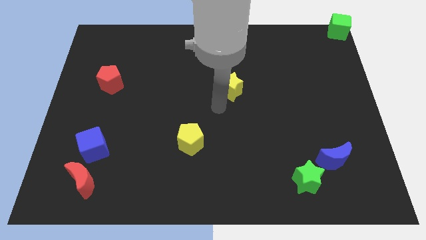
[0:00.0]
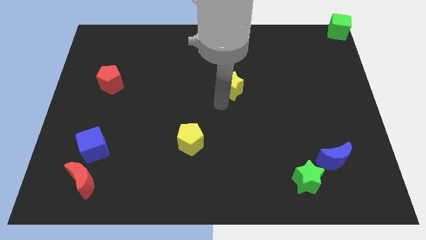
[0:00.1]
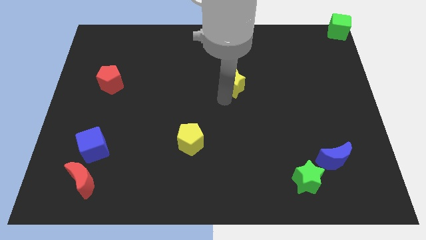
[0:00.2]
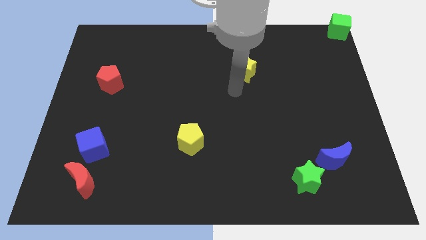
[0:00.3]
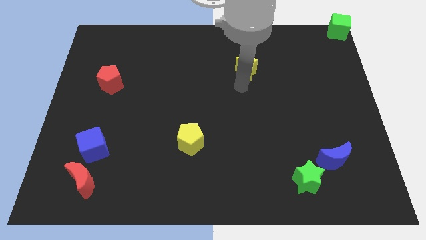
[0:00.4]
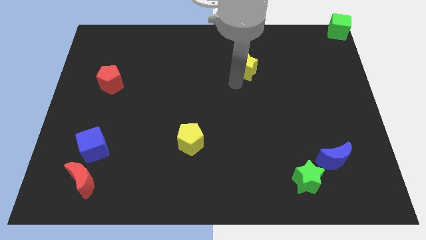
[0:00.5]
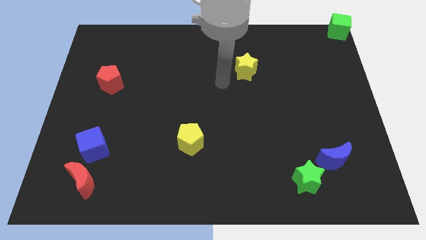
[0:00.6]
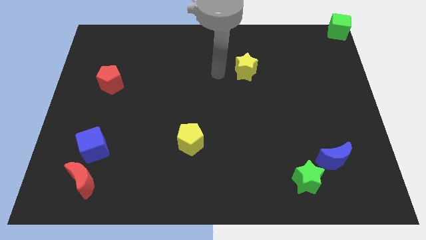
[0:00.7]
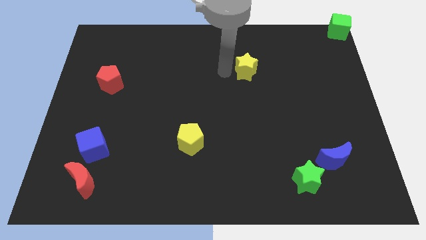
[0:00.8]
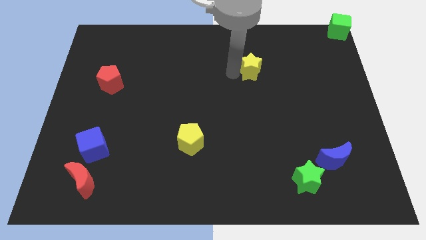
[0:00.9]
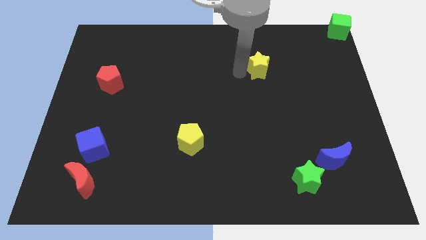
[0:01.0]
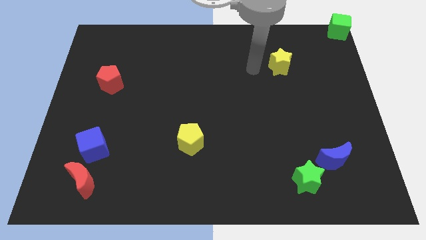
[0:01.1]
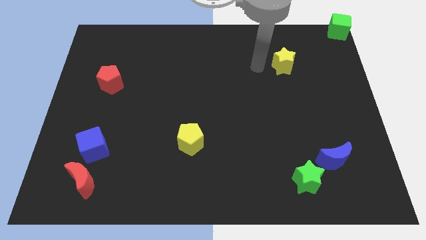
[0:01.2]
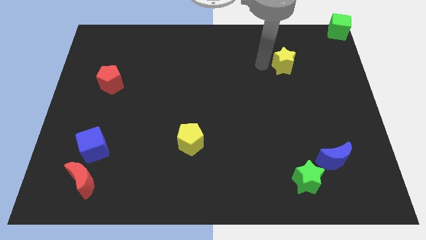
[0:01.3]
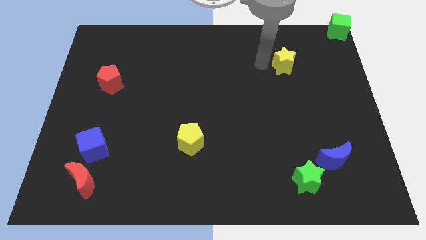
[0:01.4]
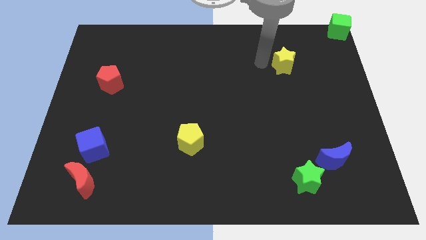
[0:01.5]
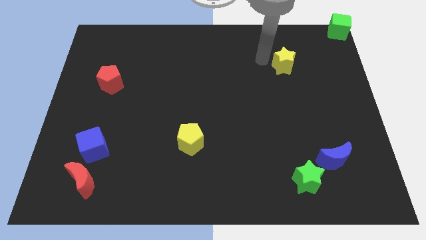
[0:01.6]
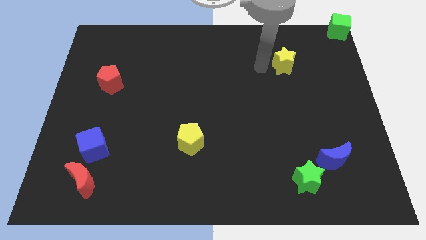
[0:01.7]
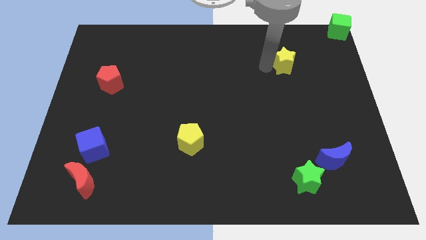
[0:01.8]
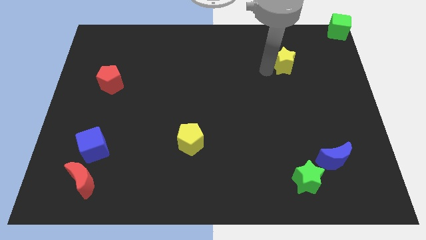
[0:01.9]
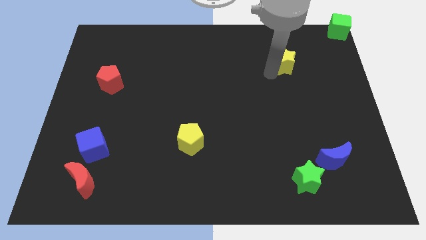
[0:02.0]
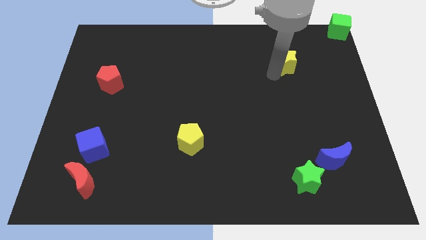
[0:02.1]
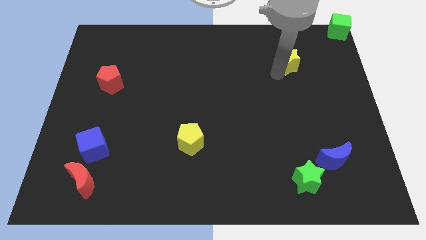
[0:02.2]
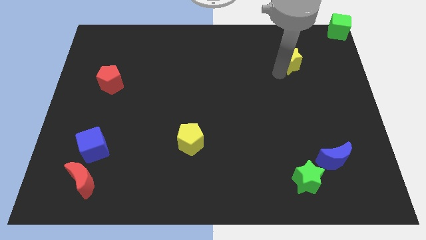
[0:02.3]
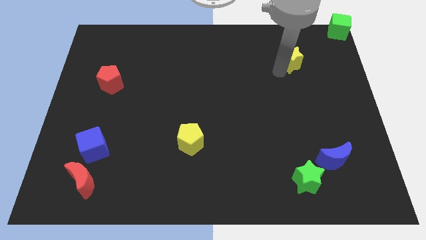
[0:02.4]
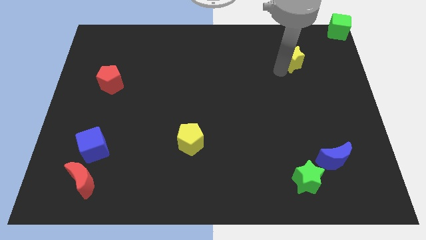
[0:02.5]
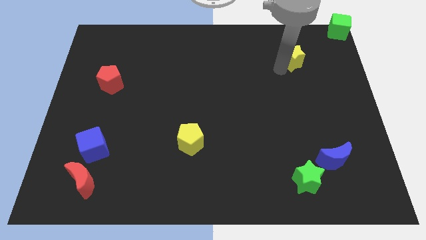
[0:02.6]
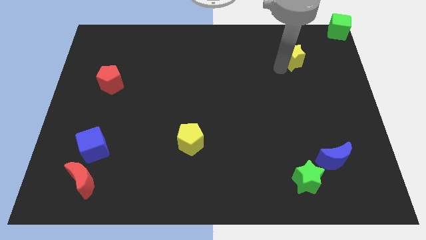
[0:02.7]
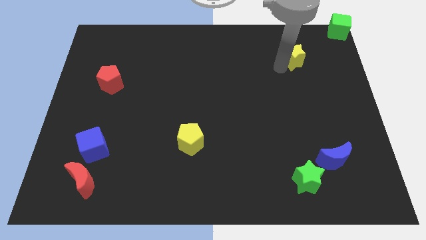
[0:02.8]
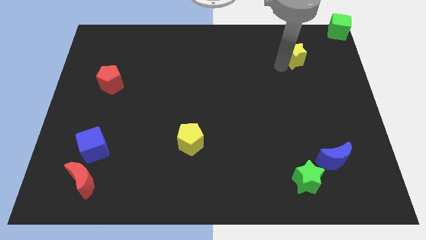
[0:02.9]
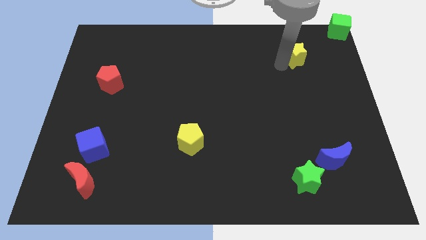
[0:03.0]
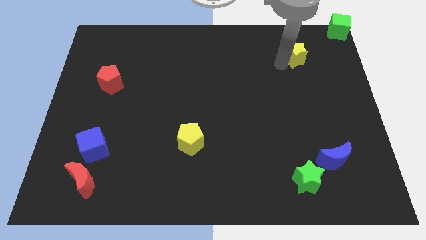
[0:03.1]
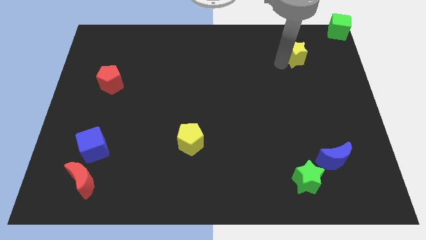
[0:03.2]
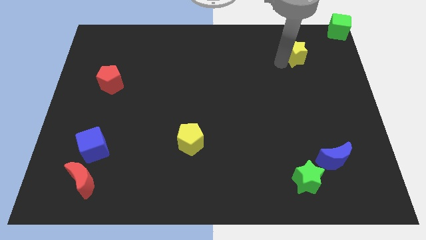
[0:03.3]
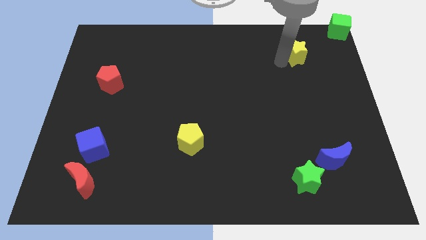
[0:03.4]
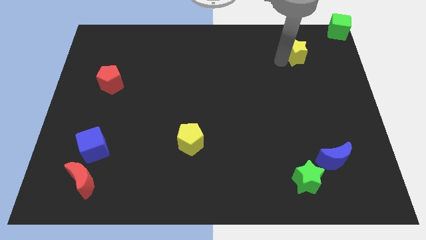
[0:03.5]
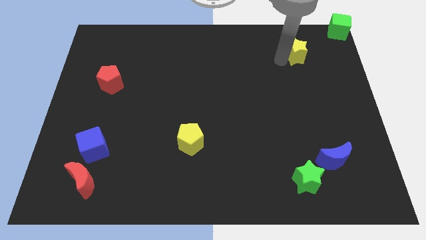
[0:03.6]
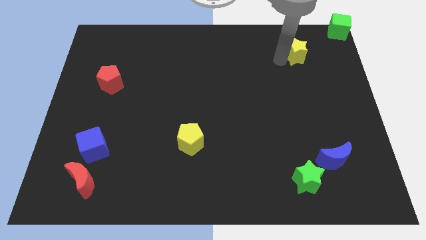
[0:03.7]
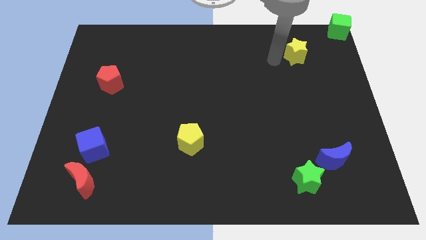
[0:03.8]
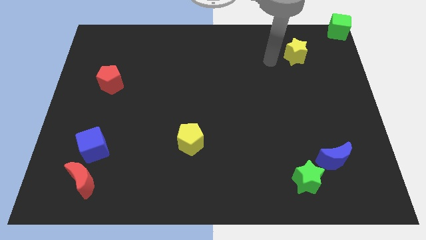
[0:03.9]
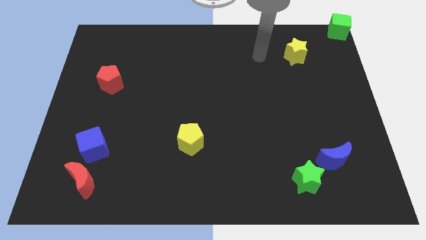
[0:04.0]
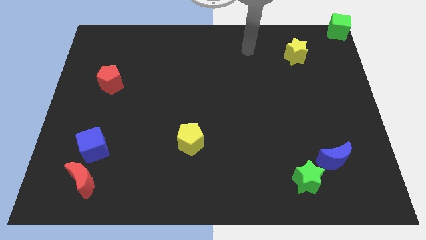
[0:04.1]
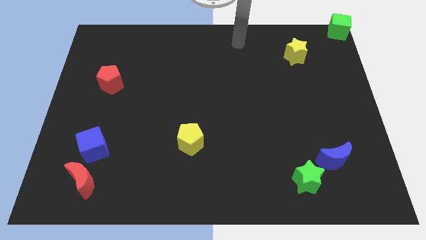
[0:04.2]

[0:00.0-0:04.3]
push the yellow star to the bottom left of the green cube

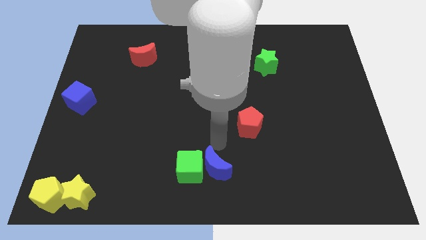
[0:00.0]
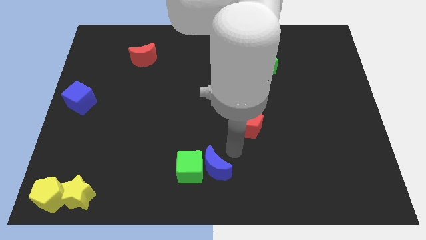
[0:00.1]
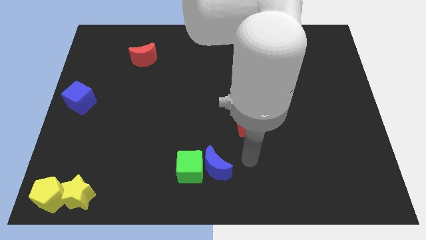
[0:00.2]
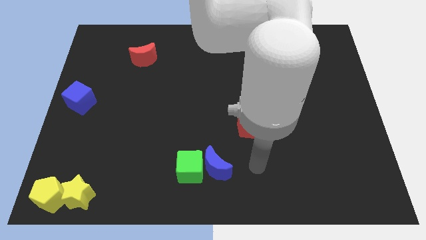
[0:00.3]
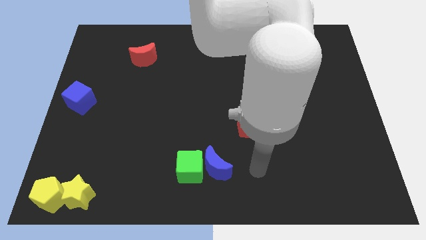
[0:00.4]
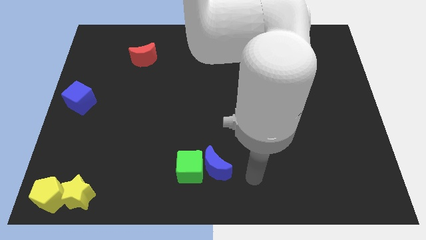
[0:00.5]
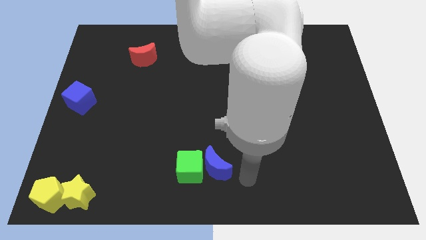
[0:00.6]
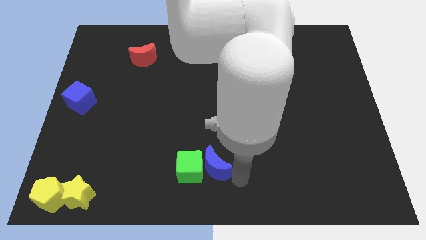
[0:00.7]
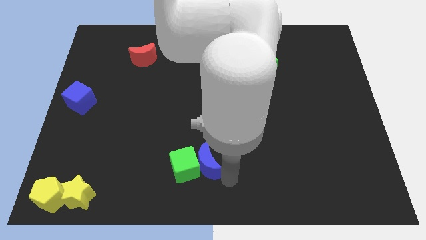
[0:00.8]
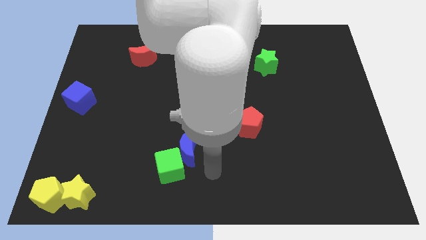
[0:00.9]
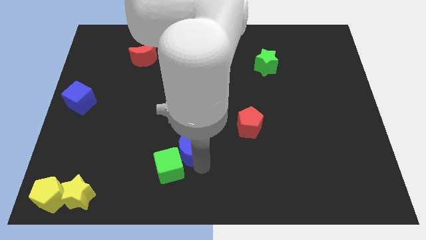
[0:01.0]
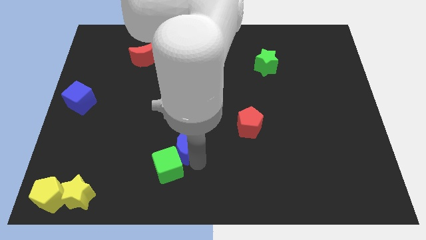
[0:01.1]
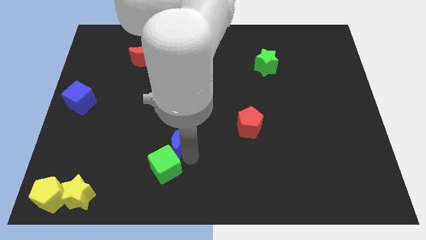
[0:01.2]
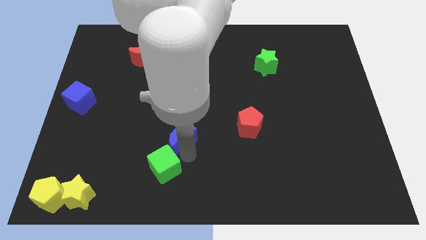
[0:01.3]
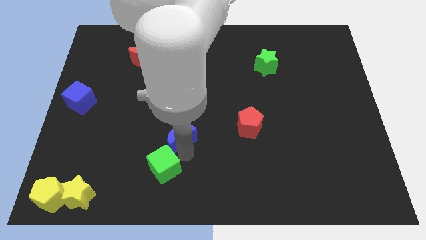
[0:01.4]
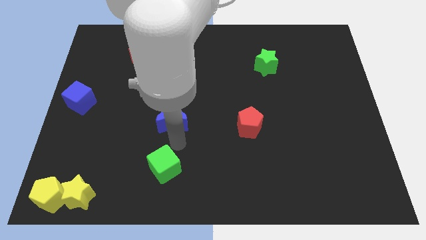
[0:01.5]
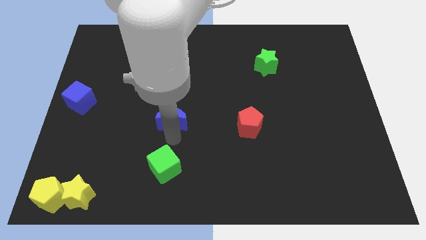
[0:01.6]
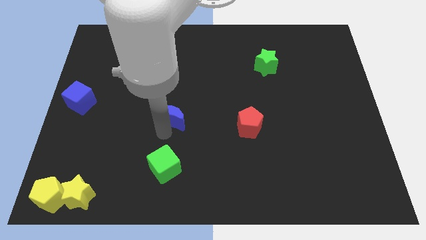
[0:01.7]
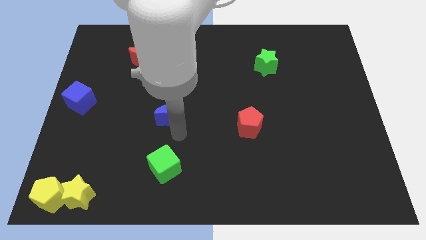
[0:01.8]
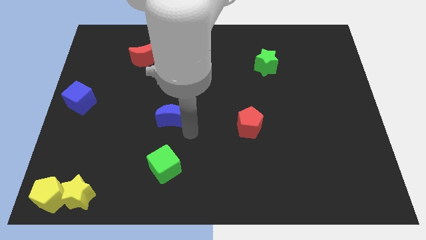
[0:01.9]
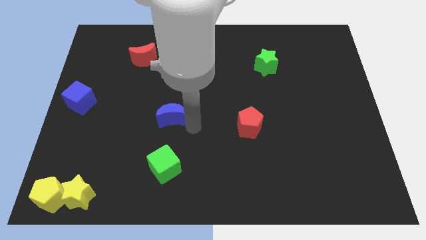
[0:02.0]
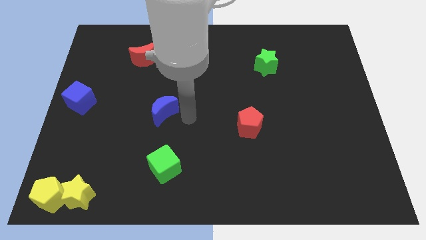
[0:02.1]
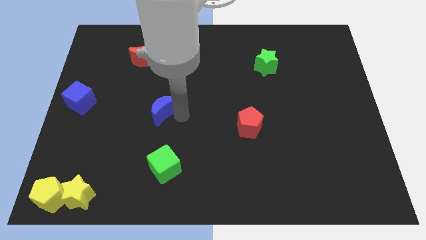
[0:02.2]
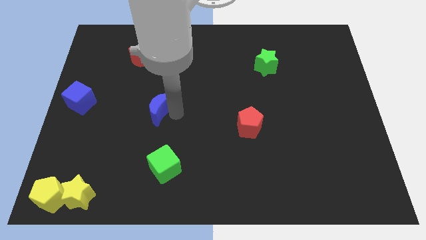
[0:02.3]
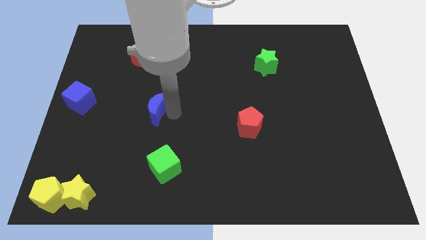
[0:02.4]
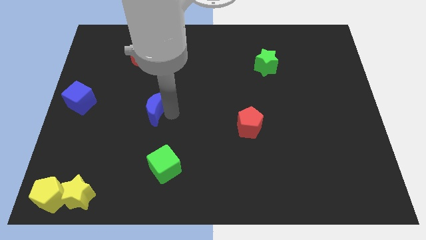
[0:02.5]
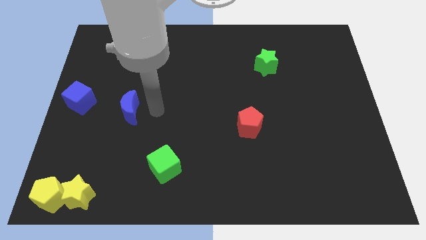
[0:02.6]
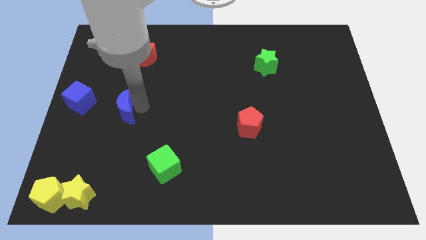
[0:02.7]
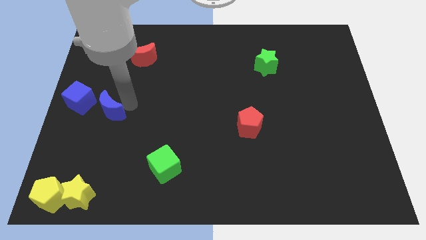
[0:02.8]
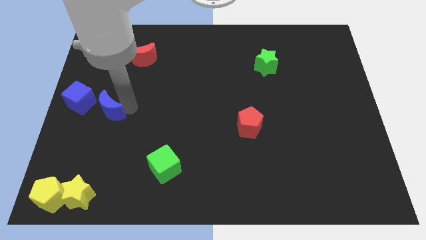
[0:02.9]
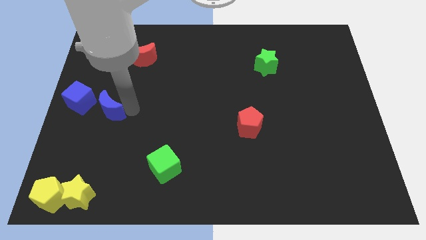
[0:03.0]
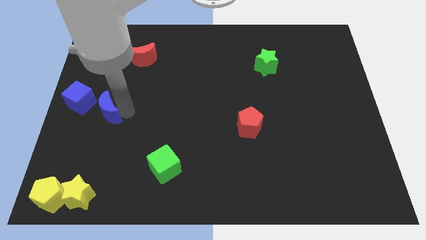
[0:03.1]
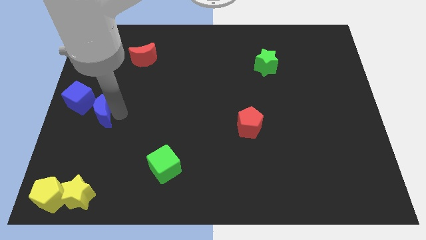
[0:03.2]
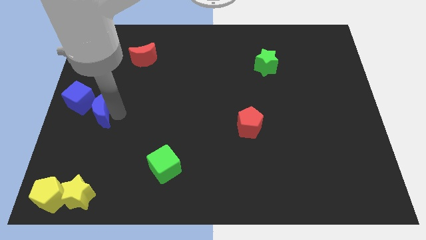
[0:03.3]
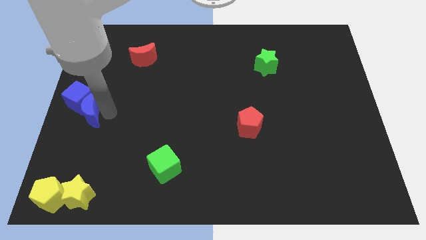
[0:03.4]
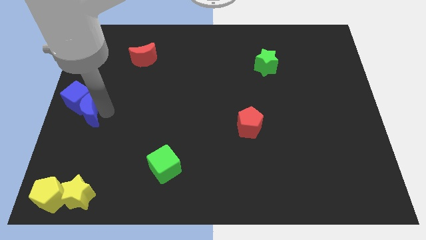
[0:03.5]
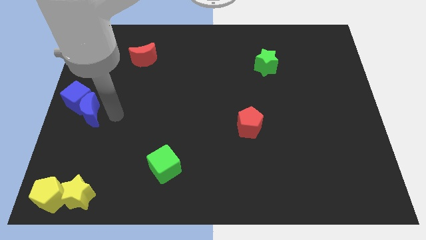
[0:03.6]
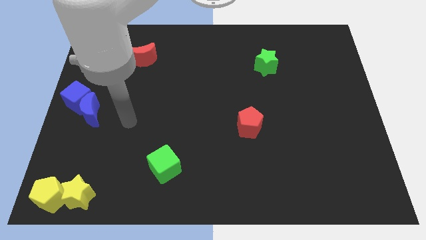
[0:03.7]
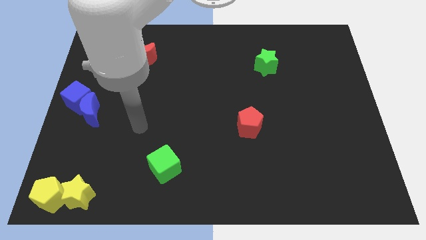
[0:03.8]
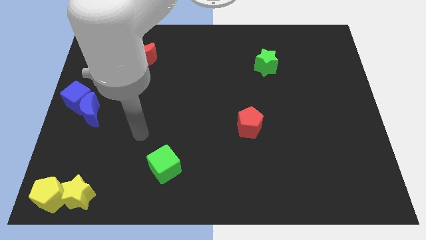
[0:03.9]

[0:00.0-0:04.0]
push the blue moon into the blue cube

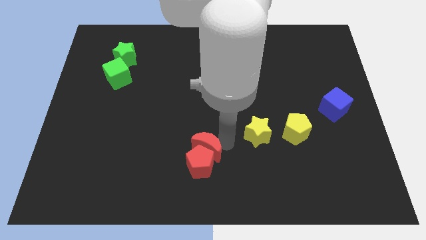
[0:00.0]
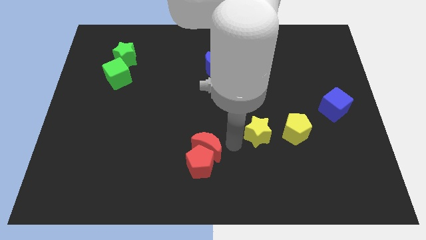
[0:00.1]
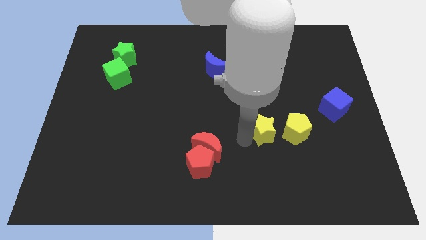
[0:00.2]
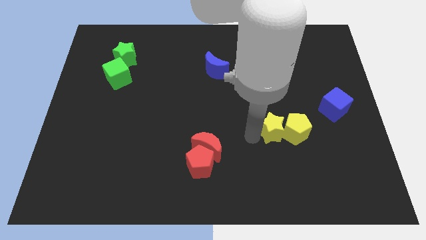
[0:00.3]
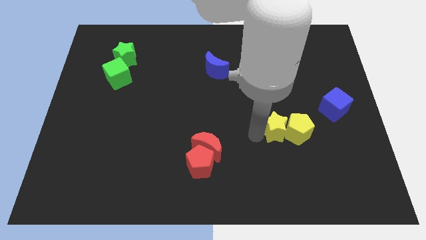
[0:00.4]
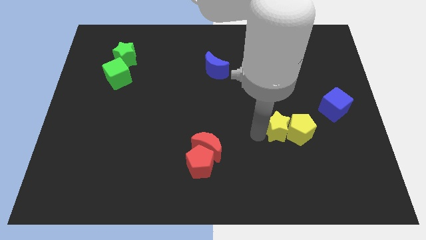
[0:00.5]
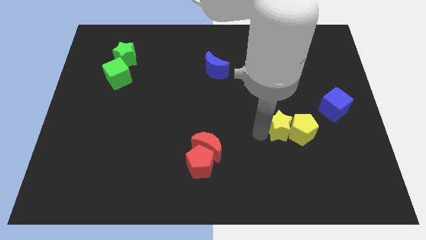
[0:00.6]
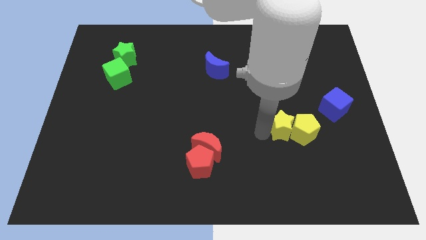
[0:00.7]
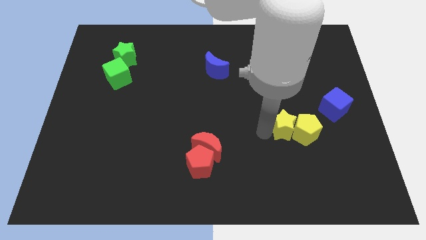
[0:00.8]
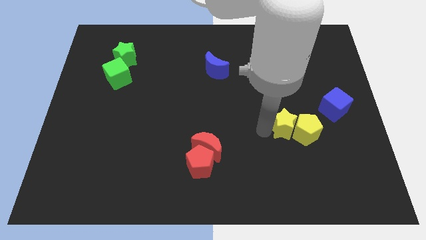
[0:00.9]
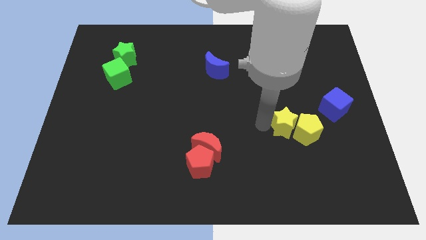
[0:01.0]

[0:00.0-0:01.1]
push the yellow star close to the yellow pentagon
